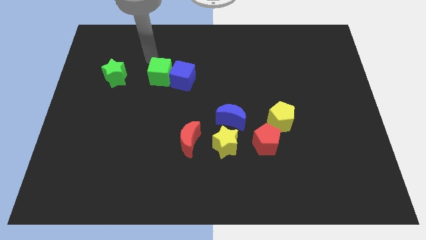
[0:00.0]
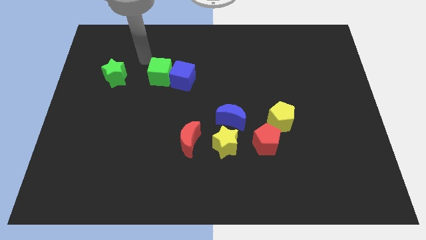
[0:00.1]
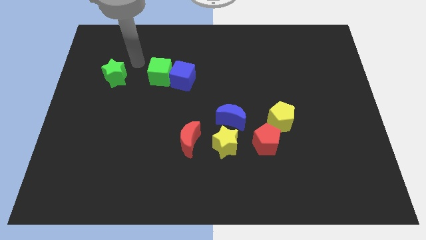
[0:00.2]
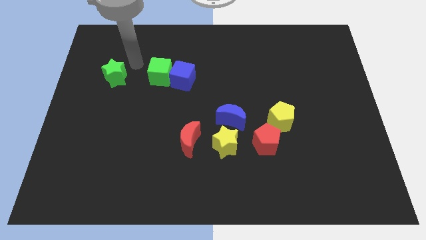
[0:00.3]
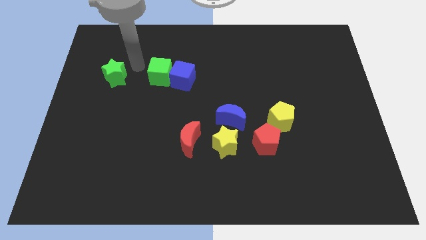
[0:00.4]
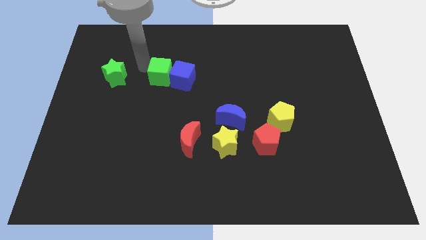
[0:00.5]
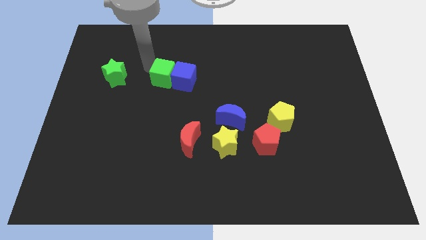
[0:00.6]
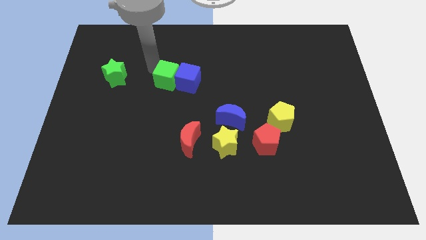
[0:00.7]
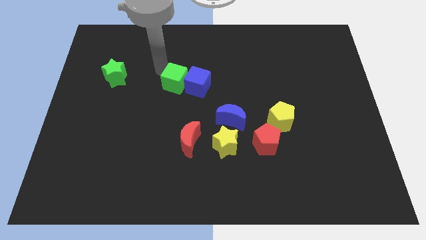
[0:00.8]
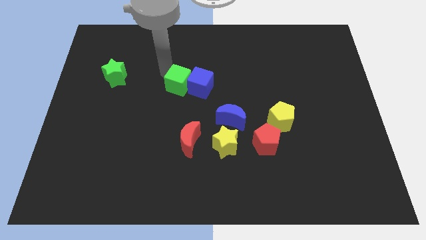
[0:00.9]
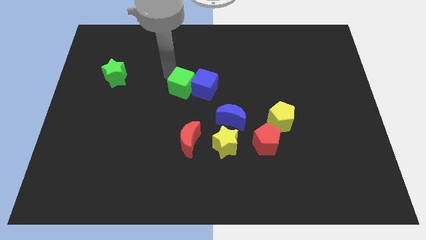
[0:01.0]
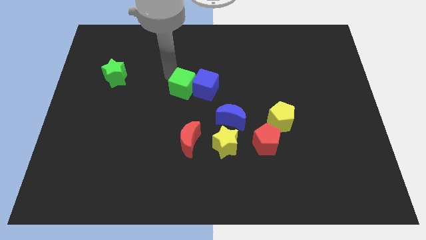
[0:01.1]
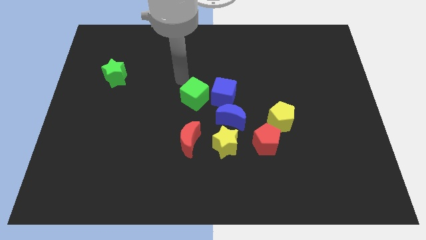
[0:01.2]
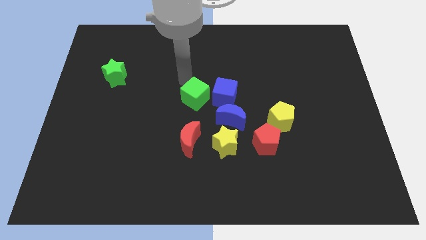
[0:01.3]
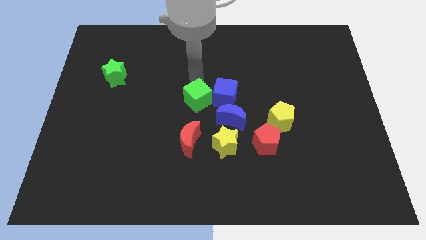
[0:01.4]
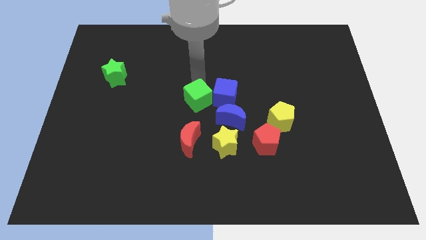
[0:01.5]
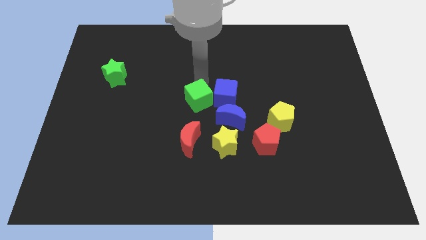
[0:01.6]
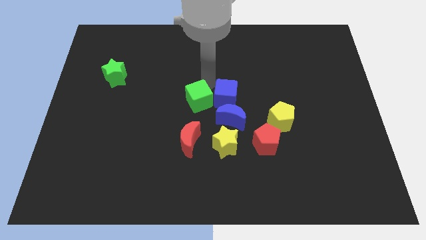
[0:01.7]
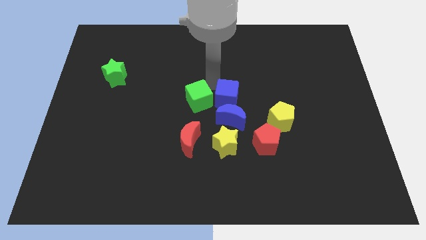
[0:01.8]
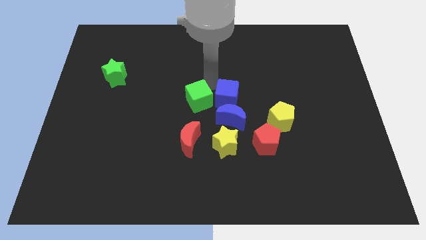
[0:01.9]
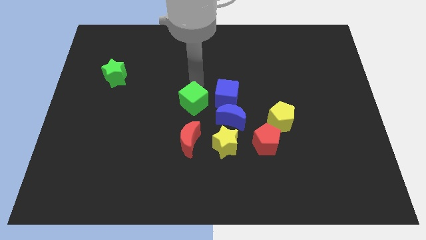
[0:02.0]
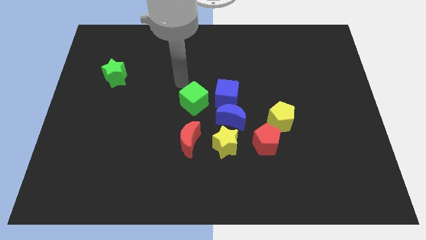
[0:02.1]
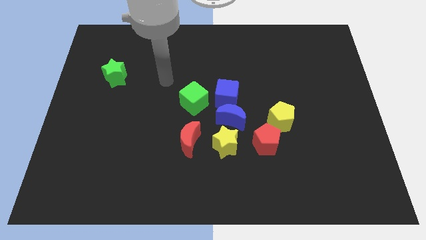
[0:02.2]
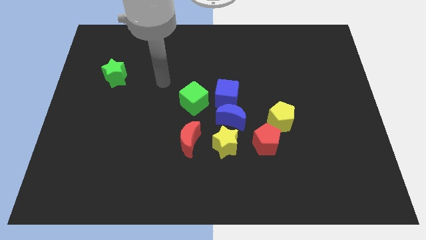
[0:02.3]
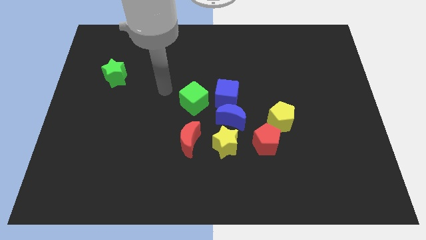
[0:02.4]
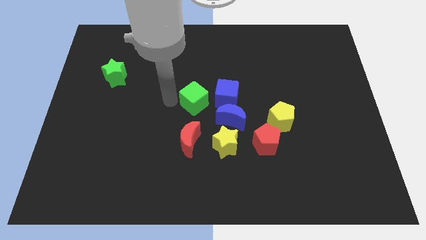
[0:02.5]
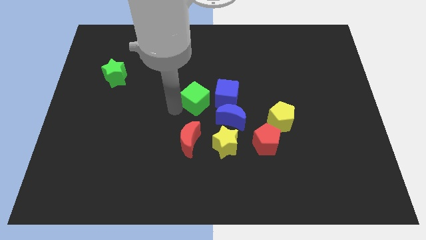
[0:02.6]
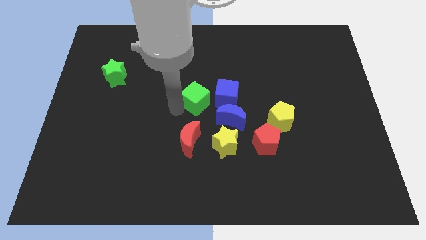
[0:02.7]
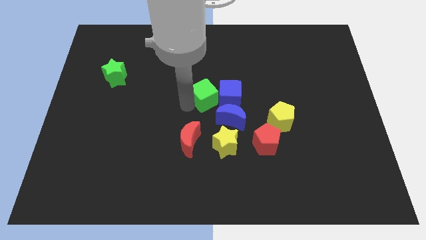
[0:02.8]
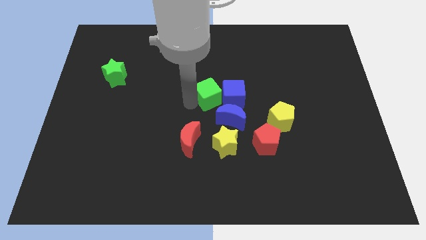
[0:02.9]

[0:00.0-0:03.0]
push green cube and blue cube together towards group of blocks

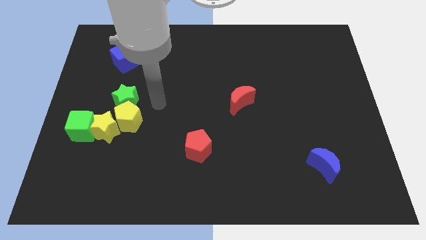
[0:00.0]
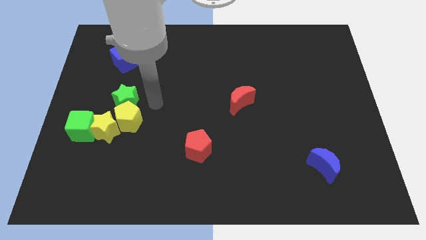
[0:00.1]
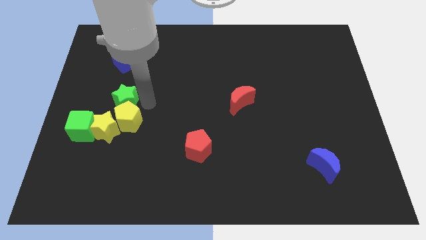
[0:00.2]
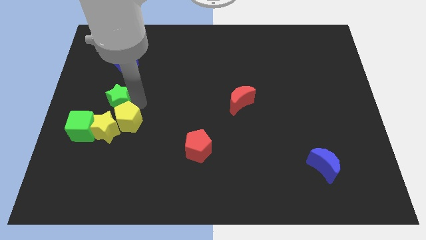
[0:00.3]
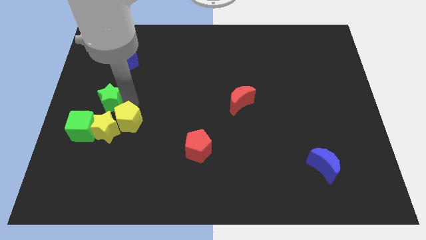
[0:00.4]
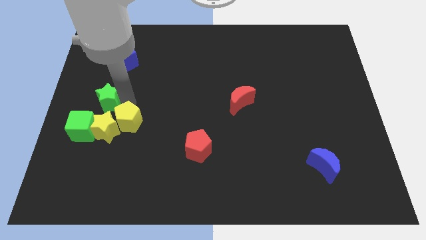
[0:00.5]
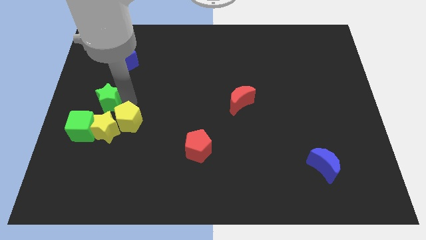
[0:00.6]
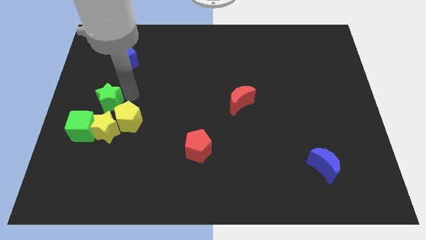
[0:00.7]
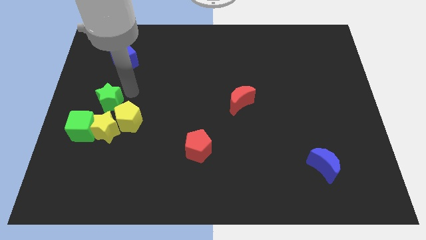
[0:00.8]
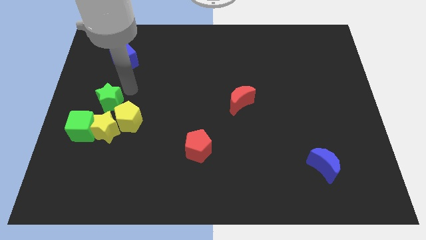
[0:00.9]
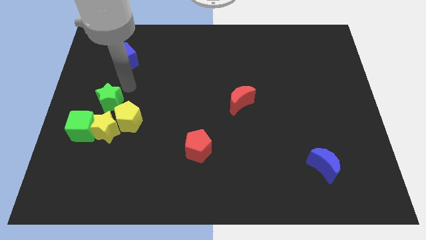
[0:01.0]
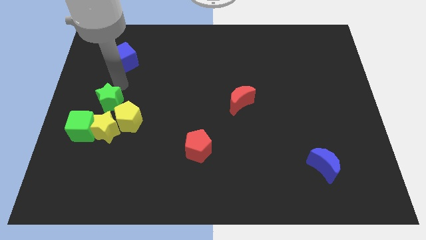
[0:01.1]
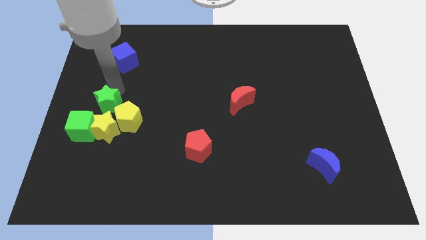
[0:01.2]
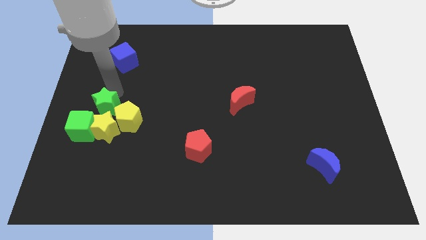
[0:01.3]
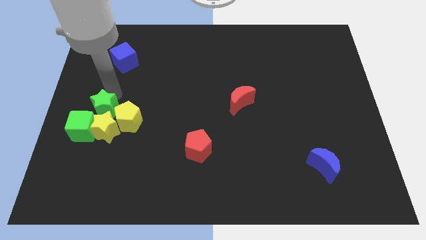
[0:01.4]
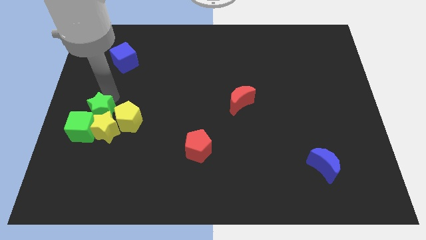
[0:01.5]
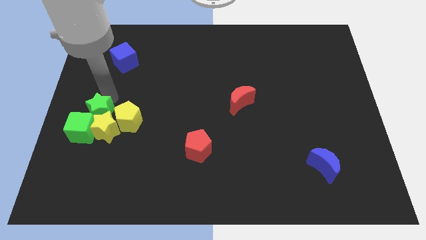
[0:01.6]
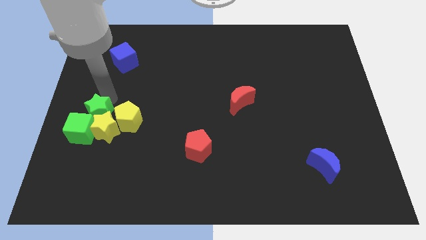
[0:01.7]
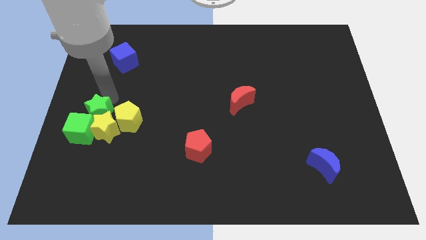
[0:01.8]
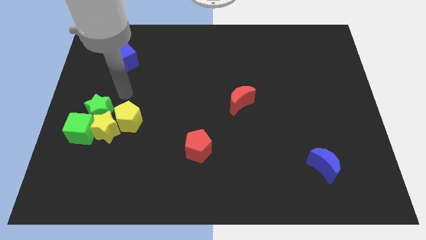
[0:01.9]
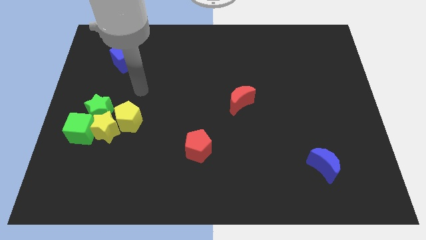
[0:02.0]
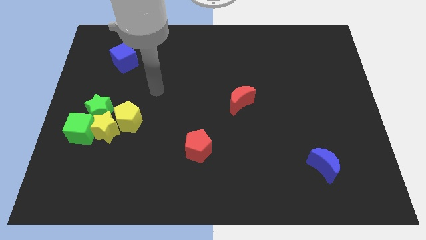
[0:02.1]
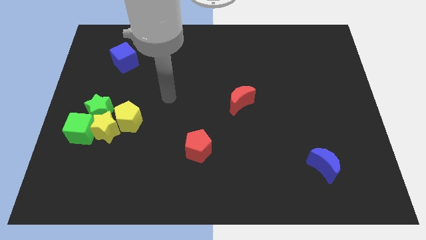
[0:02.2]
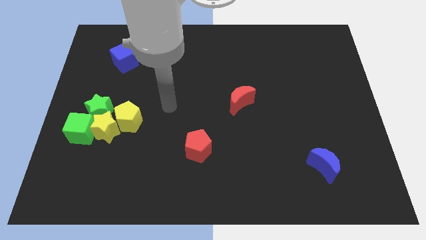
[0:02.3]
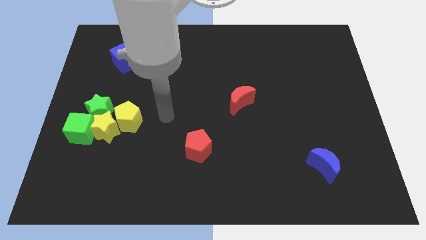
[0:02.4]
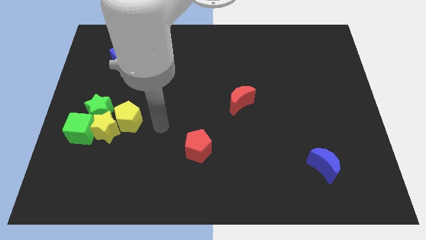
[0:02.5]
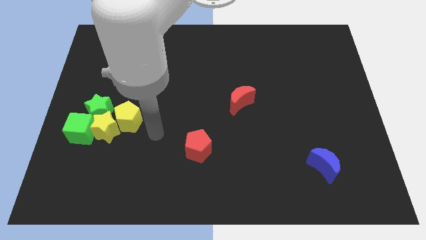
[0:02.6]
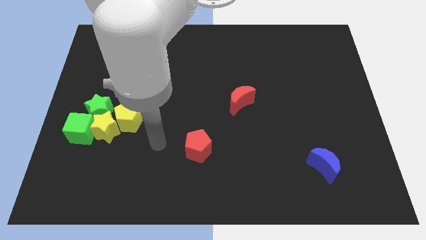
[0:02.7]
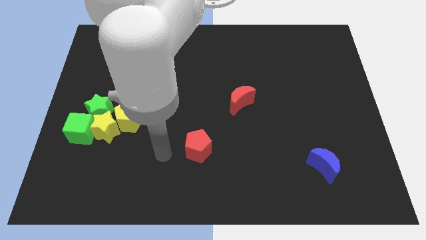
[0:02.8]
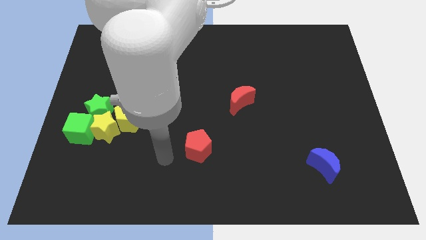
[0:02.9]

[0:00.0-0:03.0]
place the green star above the yellow star

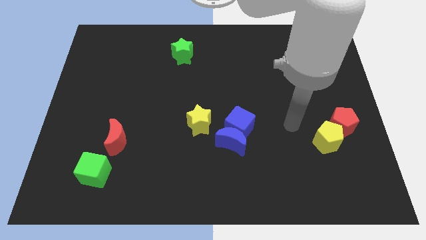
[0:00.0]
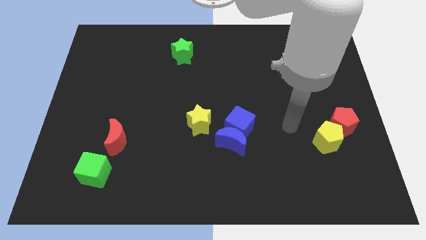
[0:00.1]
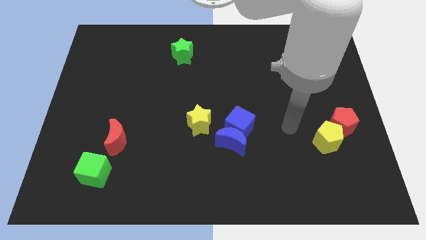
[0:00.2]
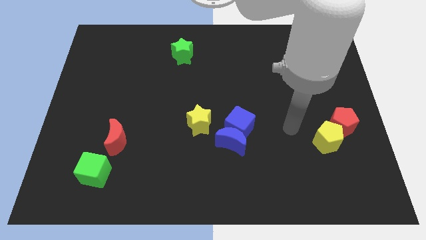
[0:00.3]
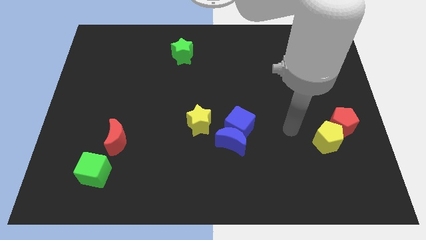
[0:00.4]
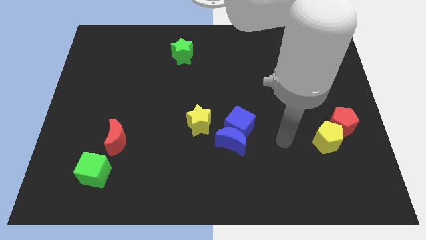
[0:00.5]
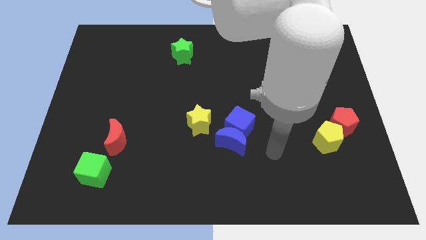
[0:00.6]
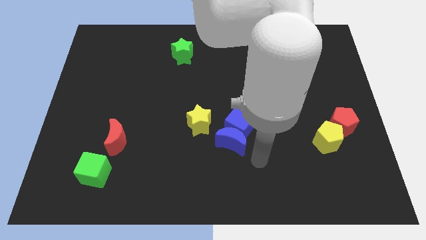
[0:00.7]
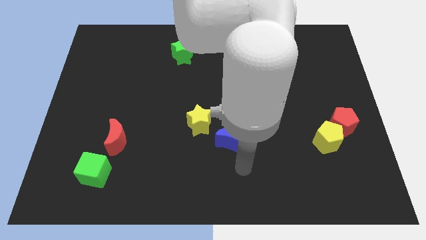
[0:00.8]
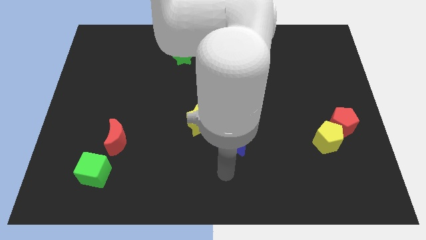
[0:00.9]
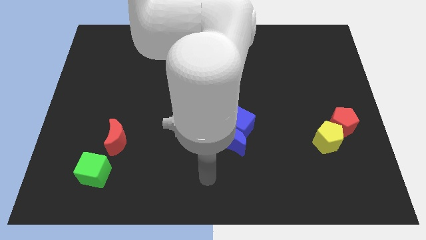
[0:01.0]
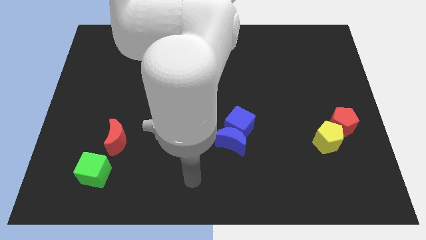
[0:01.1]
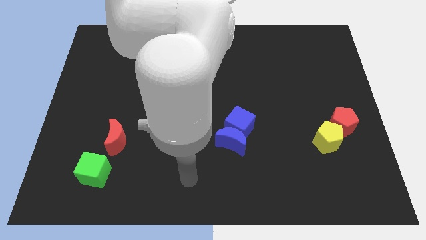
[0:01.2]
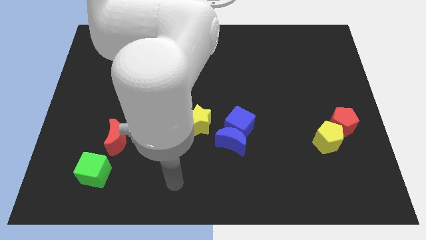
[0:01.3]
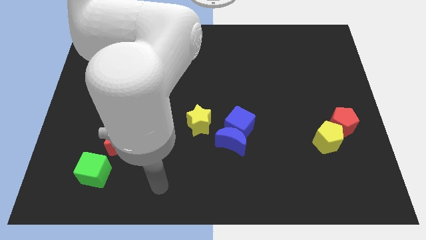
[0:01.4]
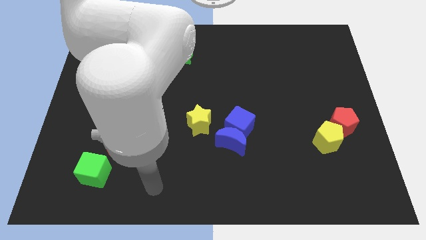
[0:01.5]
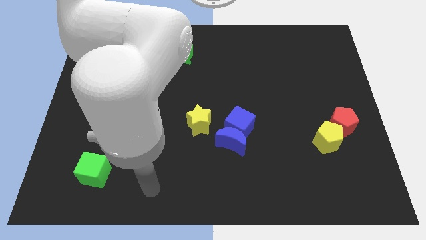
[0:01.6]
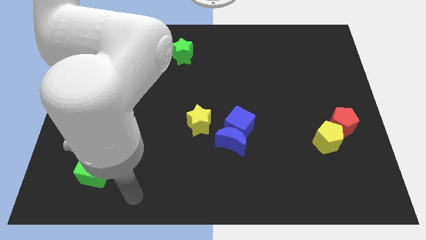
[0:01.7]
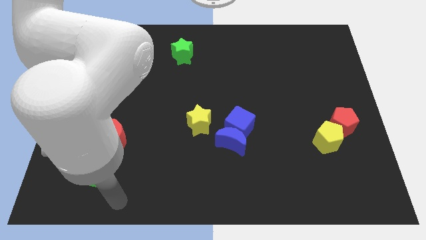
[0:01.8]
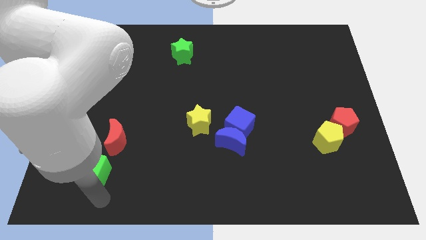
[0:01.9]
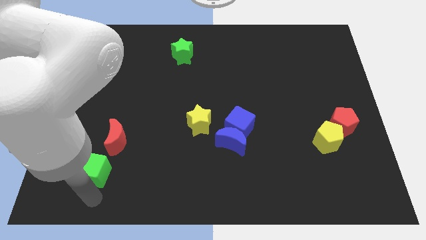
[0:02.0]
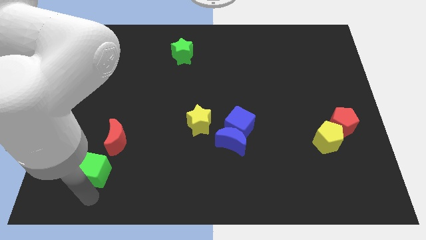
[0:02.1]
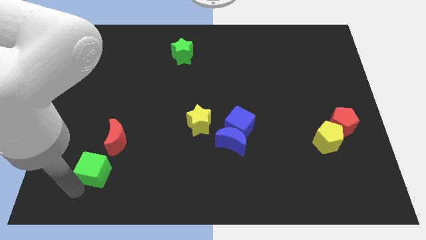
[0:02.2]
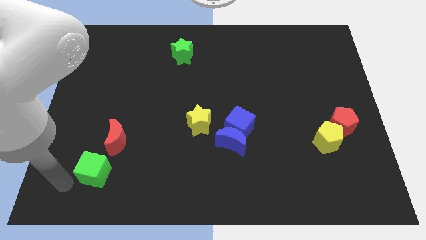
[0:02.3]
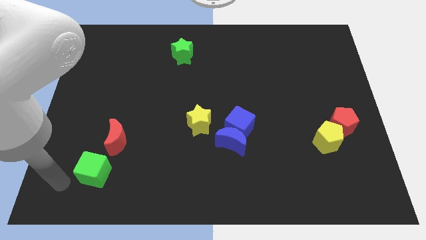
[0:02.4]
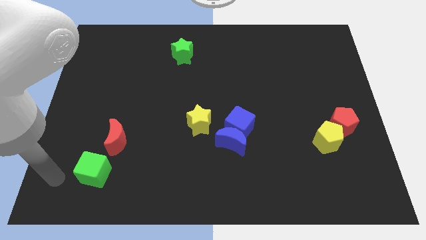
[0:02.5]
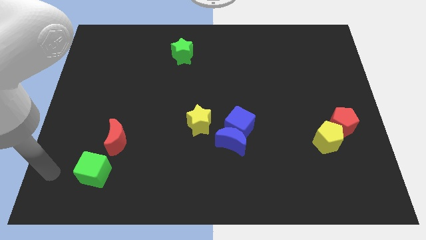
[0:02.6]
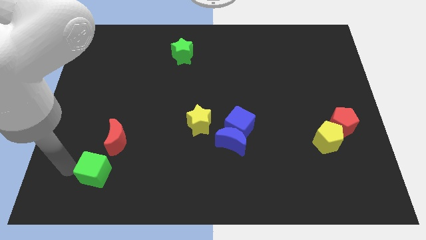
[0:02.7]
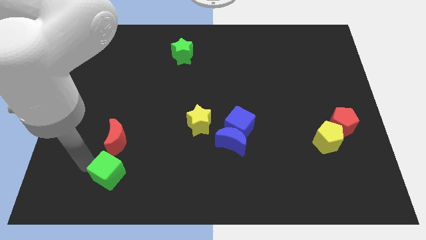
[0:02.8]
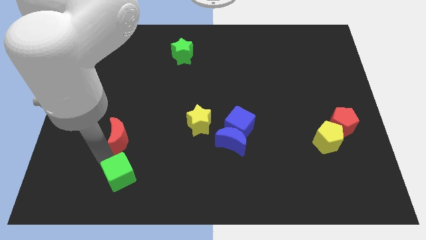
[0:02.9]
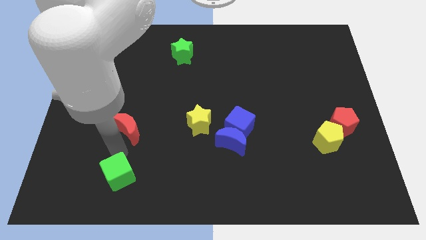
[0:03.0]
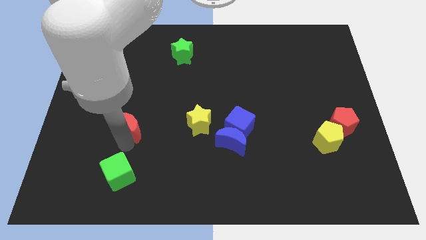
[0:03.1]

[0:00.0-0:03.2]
move the red crescent and green cube vertical to each other
